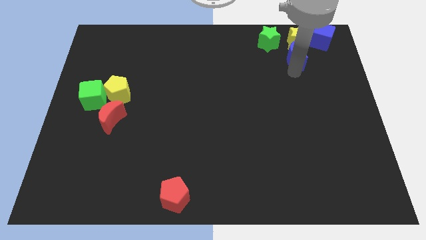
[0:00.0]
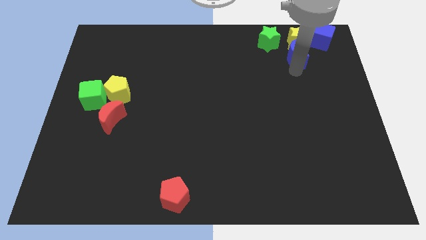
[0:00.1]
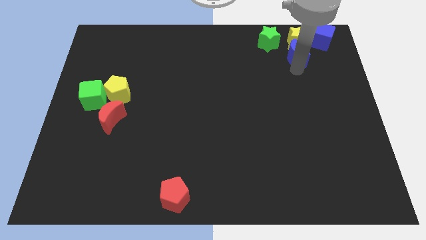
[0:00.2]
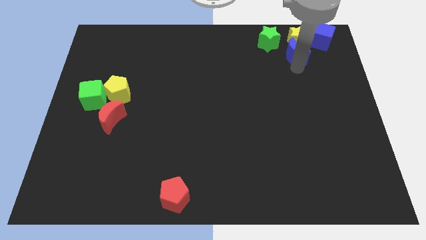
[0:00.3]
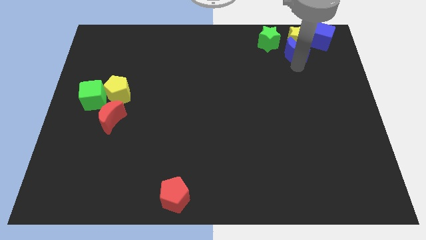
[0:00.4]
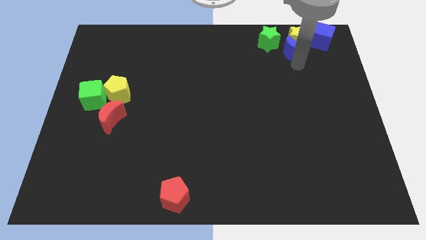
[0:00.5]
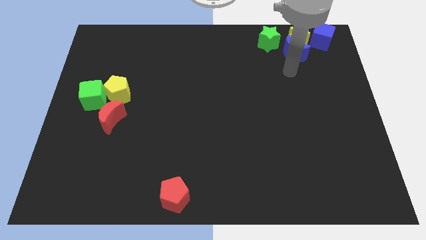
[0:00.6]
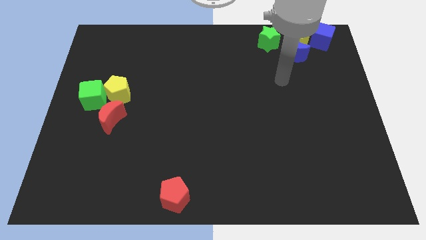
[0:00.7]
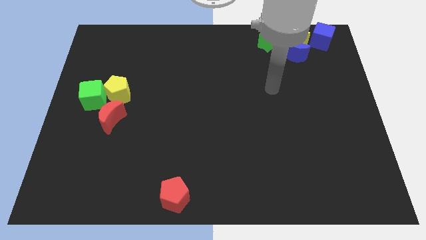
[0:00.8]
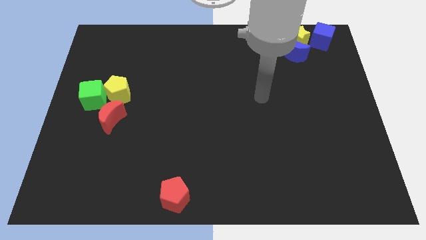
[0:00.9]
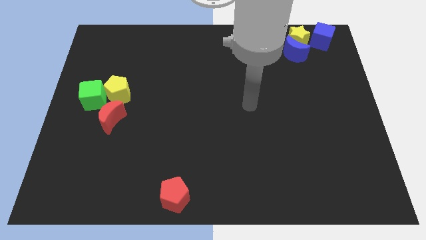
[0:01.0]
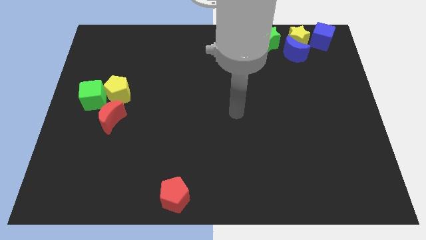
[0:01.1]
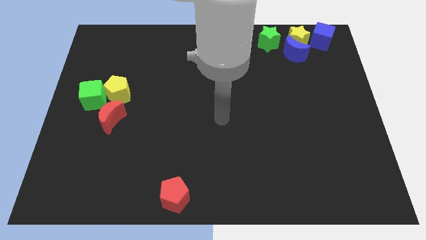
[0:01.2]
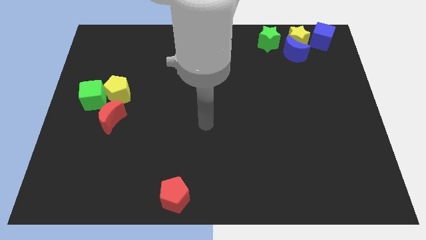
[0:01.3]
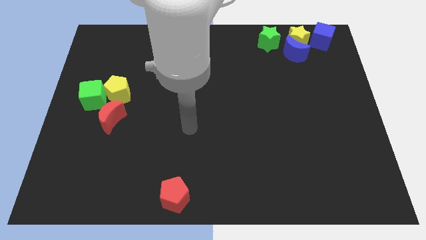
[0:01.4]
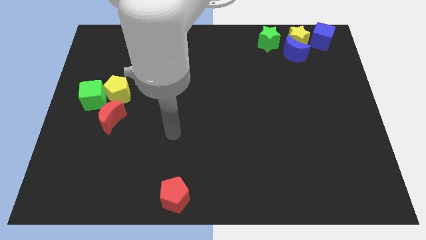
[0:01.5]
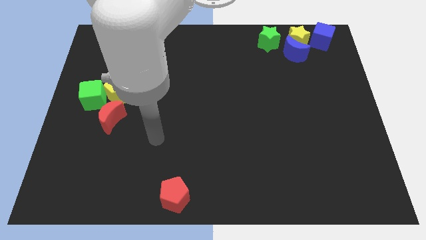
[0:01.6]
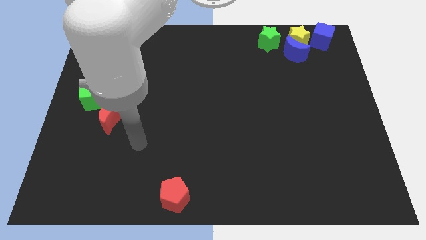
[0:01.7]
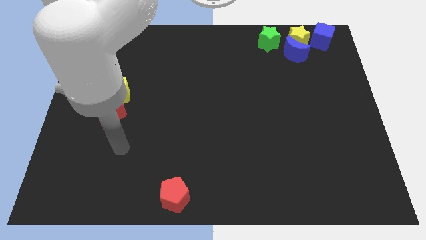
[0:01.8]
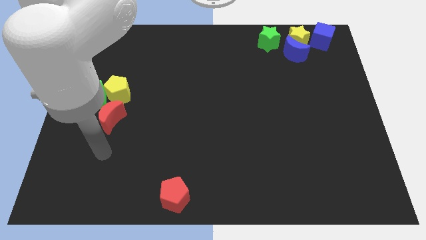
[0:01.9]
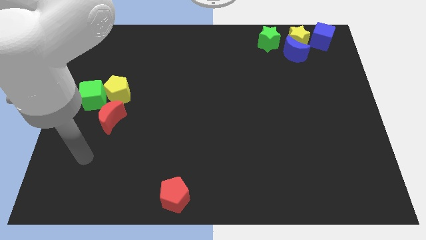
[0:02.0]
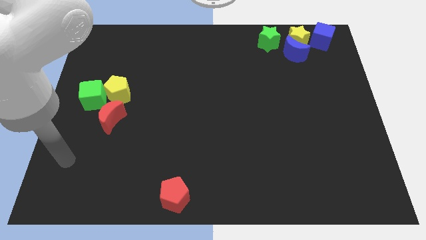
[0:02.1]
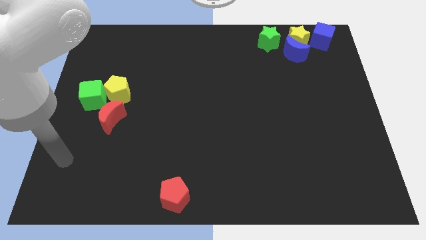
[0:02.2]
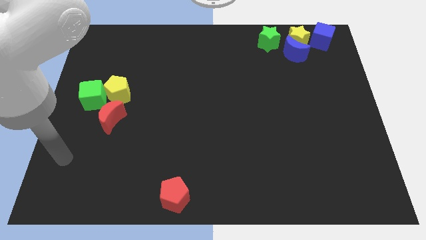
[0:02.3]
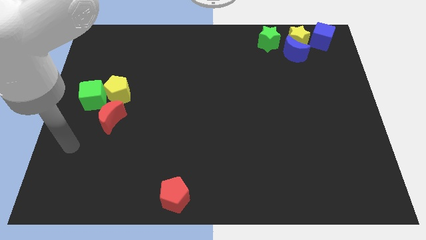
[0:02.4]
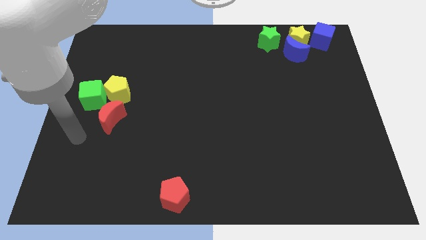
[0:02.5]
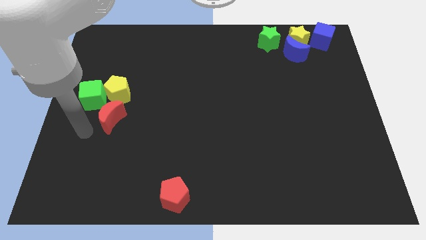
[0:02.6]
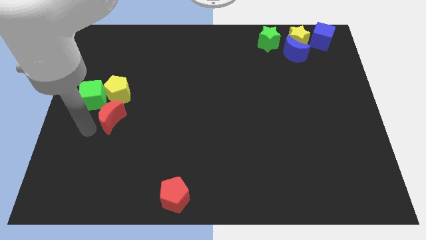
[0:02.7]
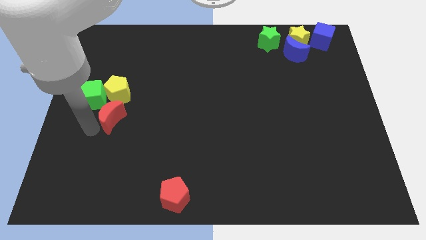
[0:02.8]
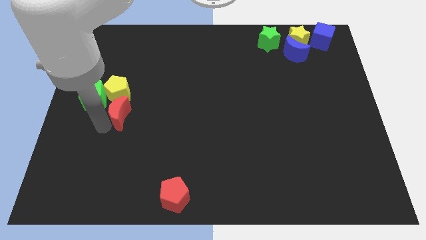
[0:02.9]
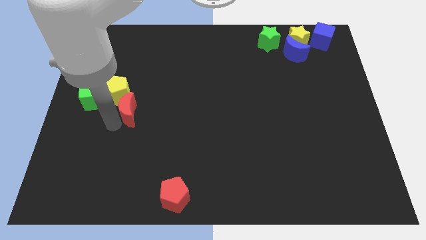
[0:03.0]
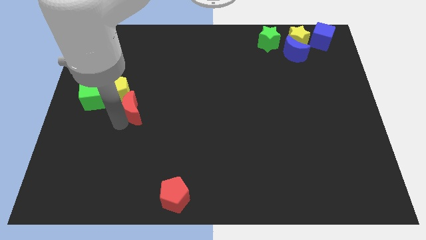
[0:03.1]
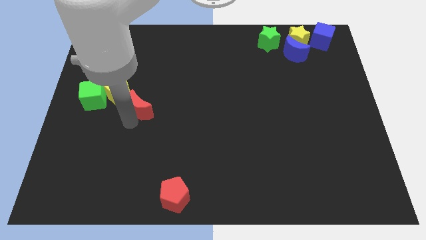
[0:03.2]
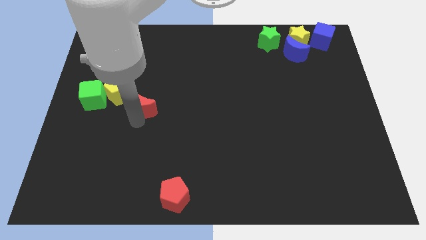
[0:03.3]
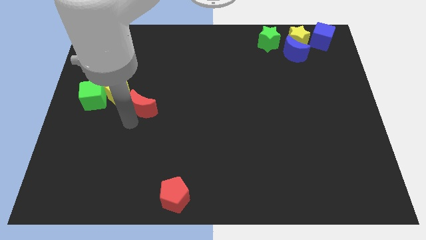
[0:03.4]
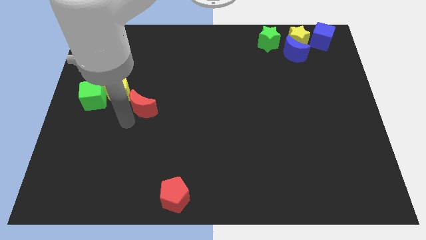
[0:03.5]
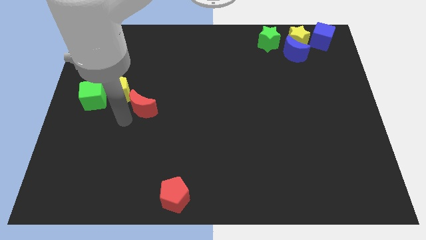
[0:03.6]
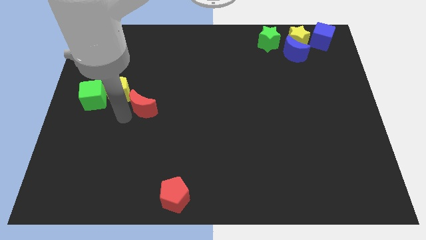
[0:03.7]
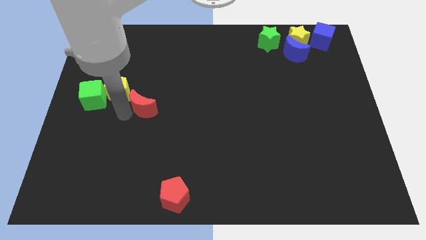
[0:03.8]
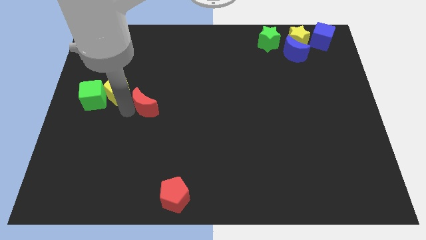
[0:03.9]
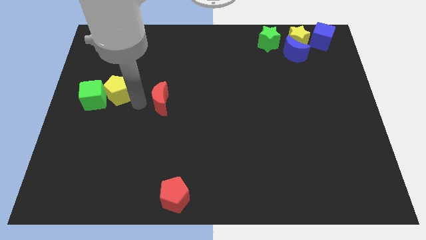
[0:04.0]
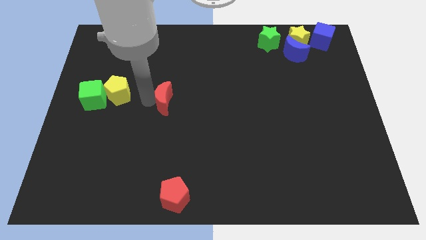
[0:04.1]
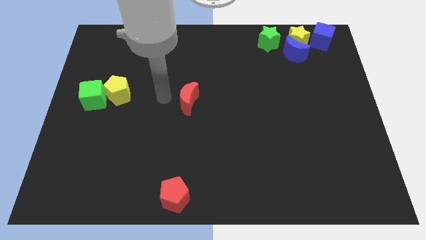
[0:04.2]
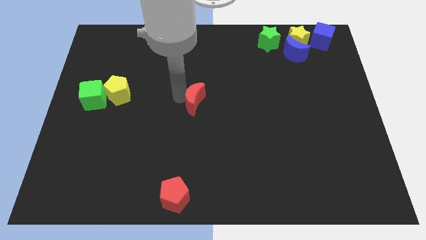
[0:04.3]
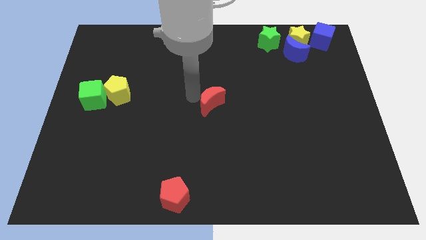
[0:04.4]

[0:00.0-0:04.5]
move the red moon to the center of the board

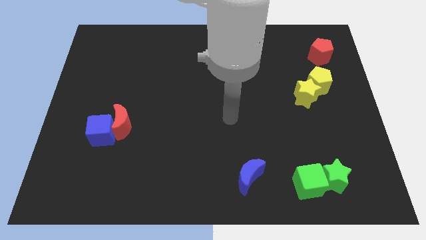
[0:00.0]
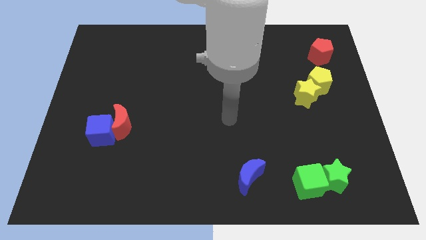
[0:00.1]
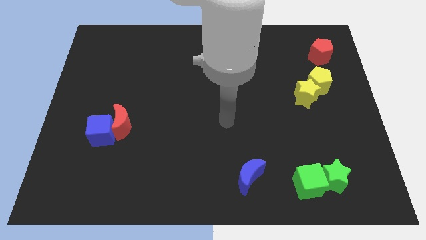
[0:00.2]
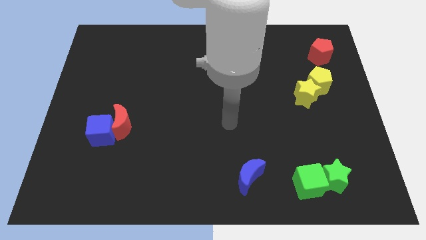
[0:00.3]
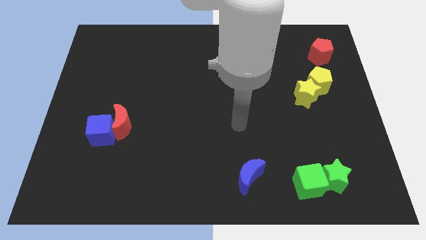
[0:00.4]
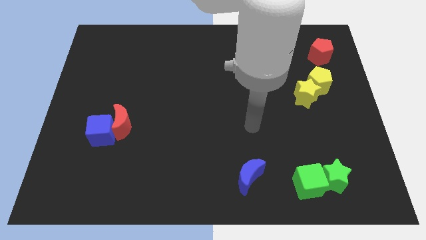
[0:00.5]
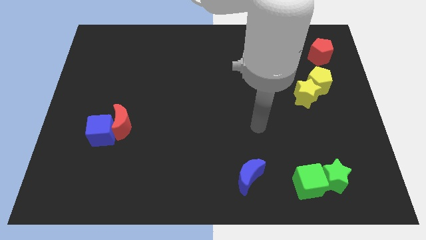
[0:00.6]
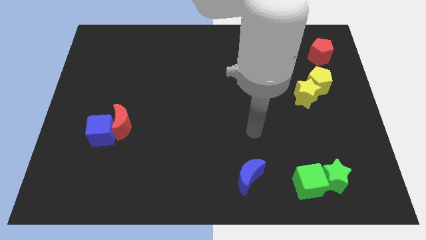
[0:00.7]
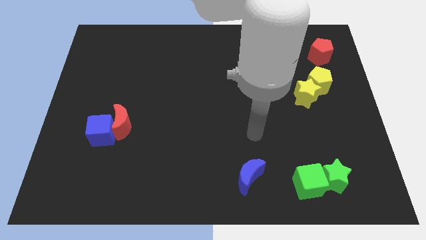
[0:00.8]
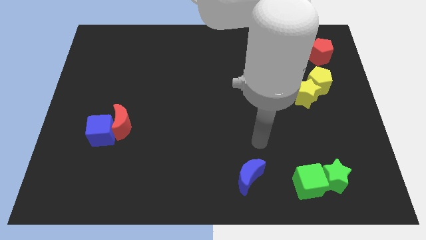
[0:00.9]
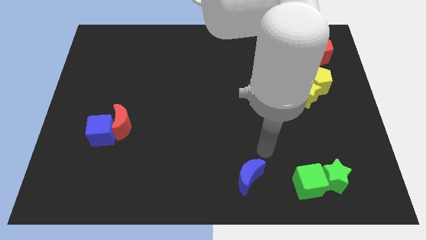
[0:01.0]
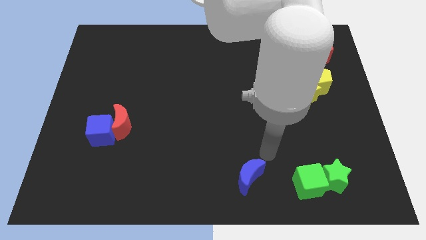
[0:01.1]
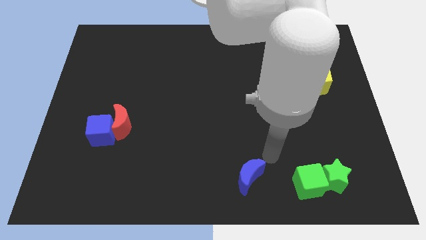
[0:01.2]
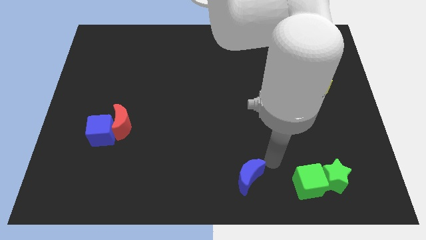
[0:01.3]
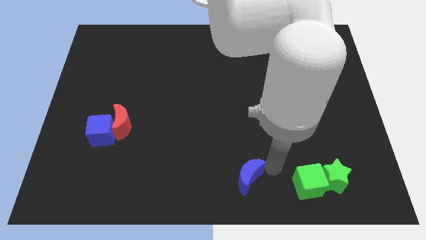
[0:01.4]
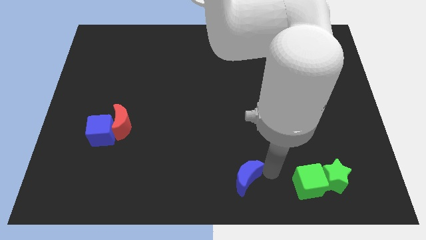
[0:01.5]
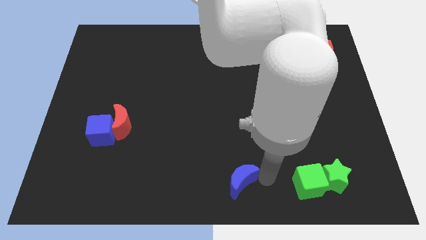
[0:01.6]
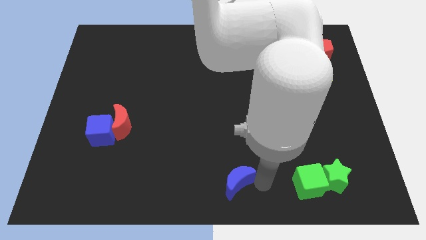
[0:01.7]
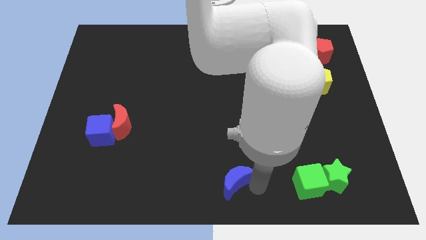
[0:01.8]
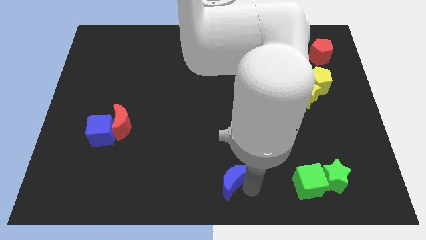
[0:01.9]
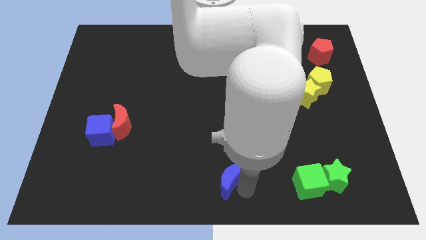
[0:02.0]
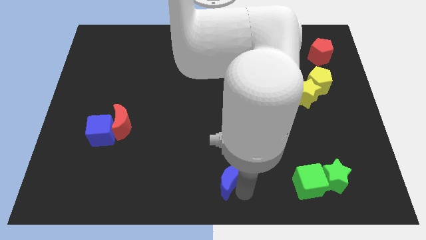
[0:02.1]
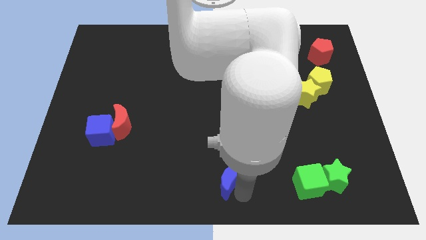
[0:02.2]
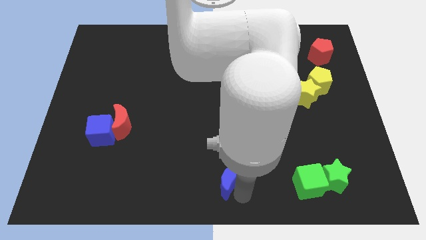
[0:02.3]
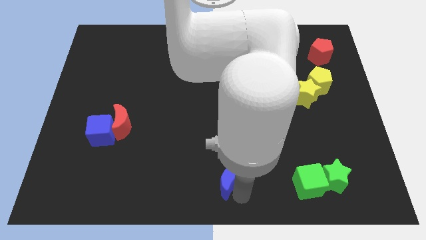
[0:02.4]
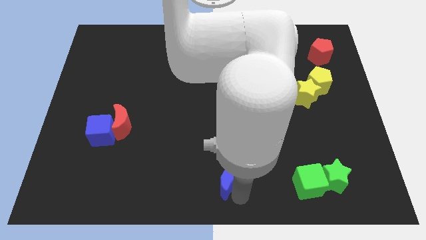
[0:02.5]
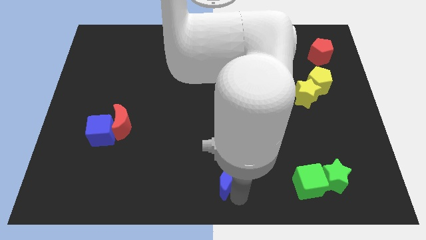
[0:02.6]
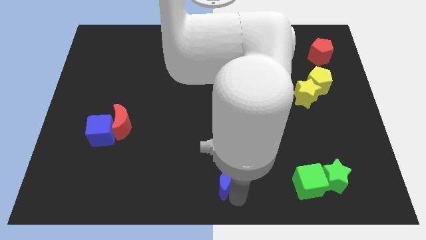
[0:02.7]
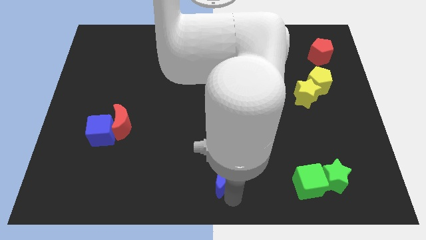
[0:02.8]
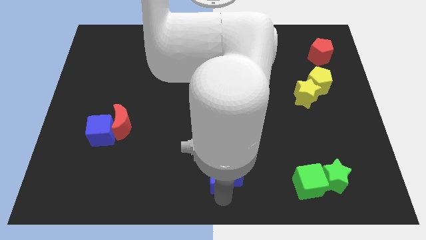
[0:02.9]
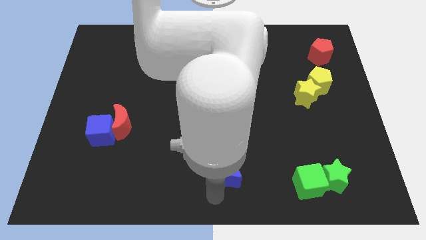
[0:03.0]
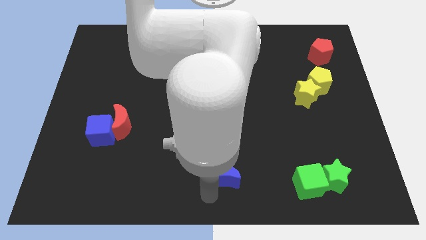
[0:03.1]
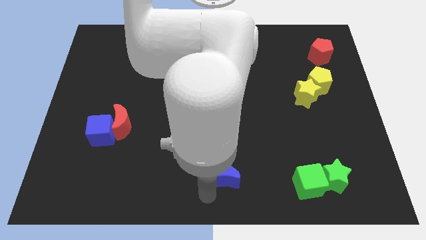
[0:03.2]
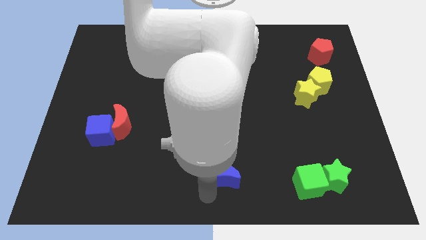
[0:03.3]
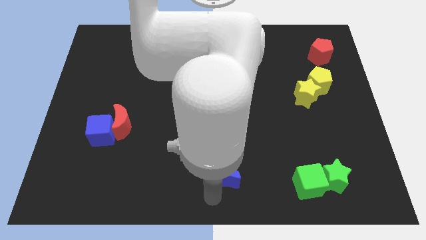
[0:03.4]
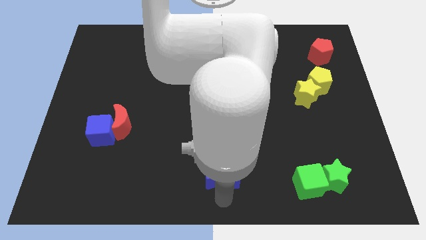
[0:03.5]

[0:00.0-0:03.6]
move the blue moon to the bottom center of the board

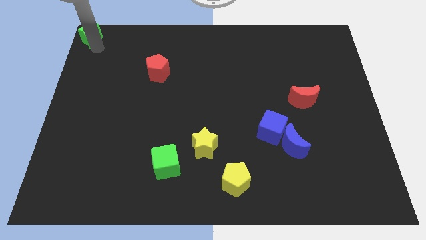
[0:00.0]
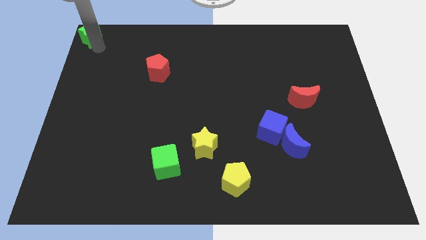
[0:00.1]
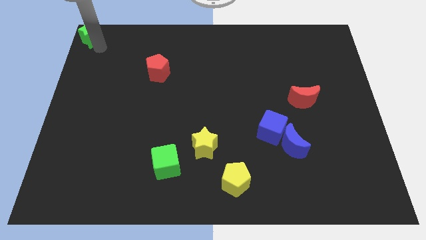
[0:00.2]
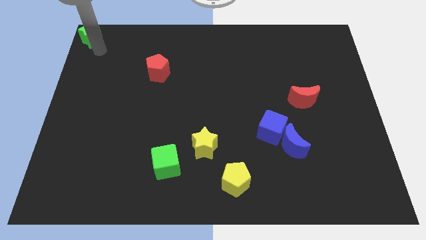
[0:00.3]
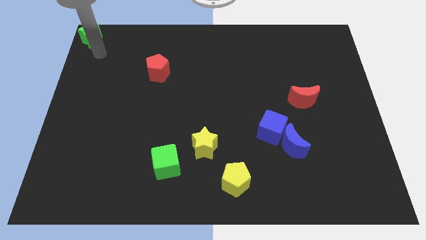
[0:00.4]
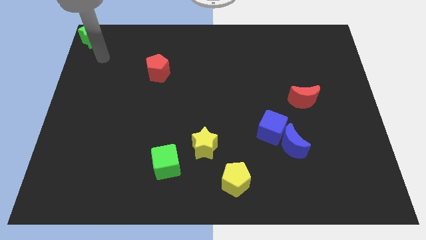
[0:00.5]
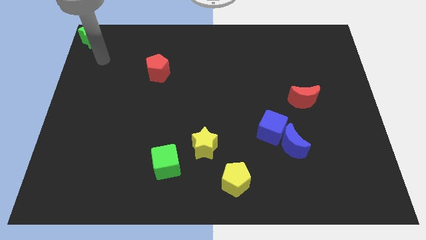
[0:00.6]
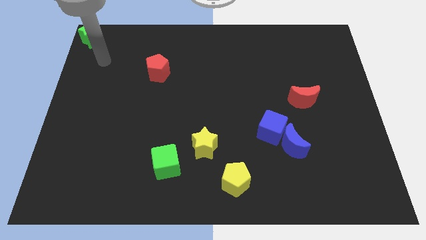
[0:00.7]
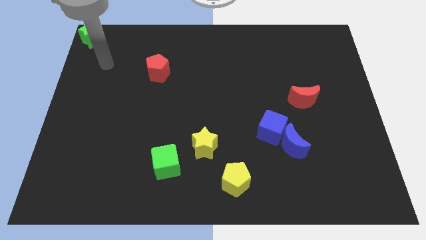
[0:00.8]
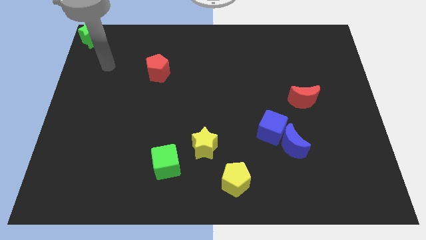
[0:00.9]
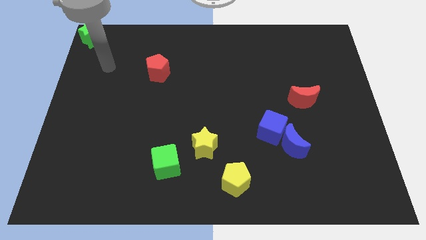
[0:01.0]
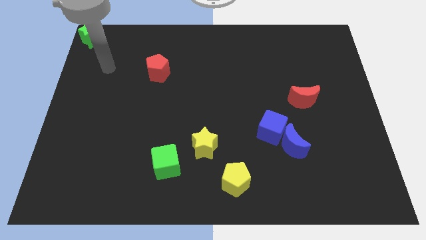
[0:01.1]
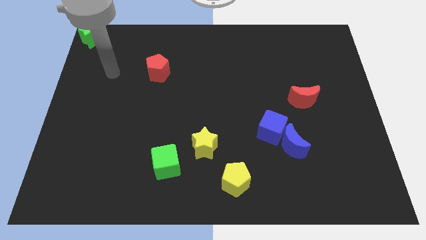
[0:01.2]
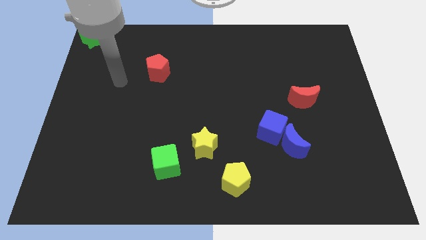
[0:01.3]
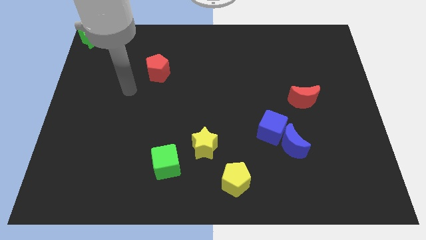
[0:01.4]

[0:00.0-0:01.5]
move the arm away from the green star
